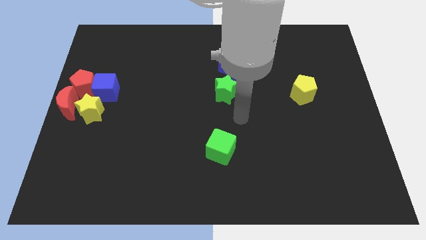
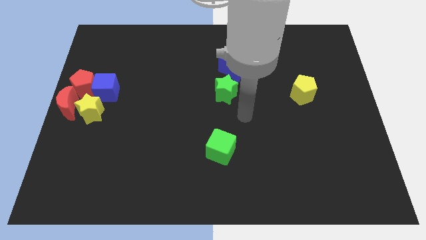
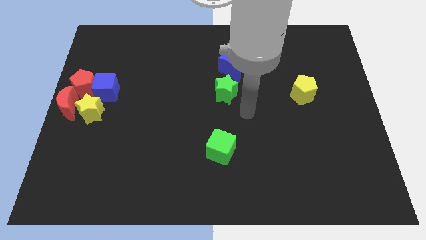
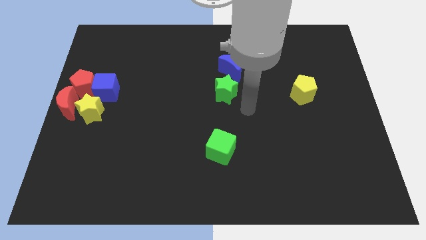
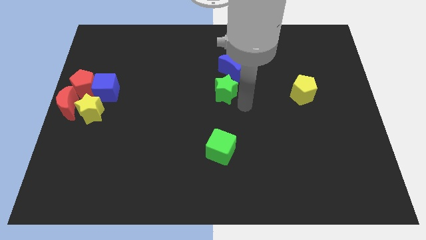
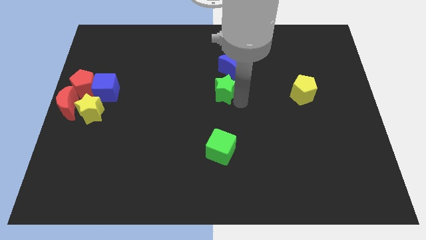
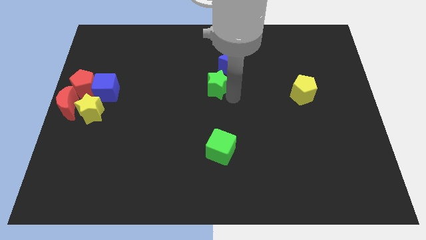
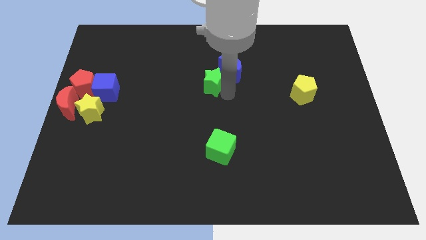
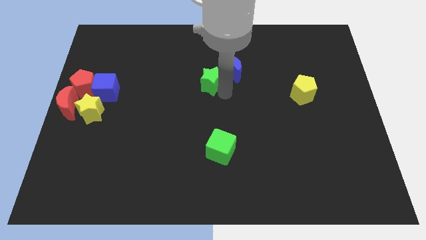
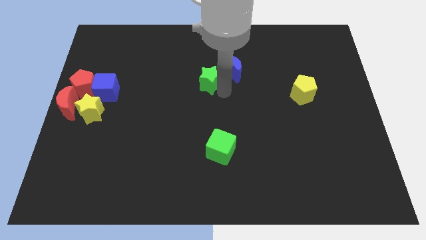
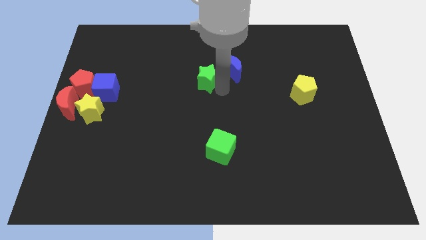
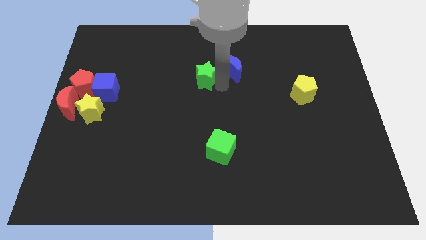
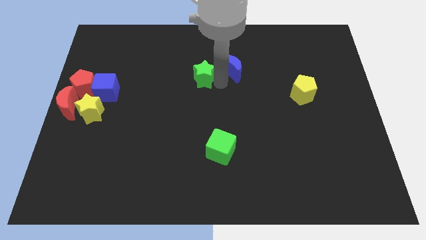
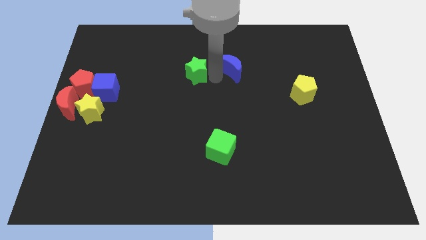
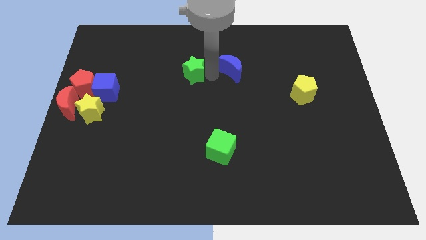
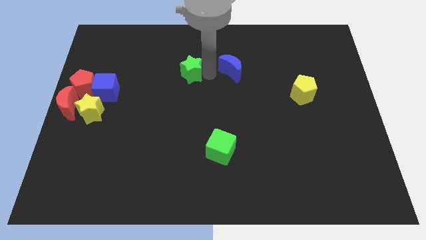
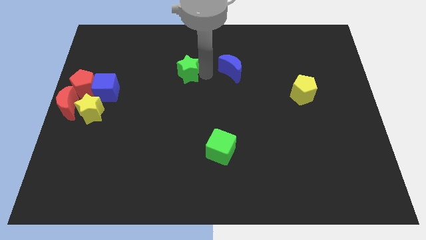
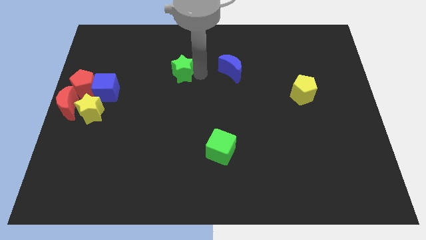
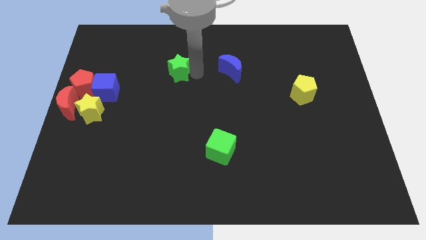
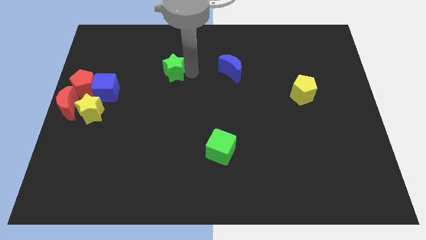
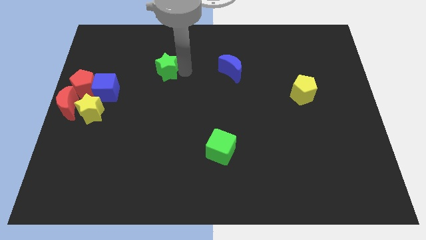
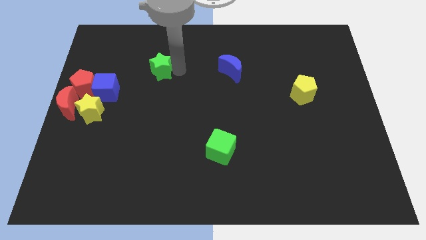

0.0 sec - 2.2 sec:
separate green star and the blue crescent

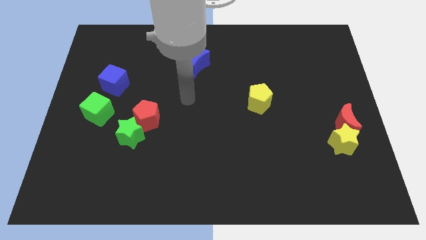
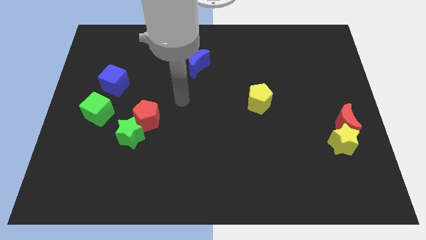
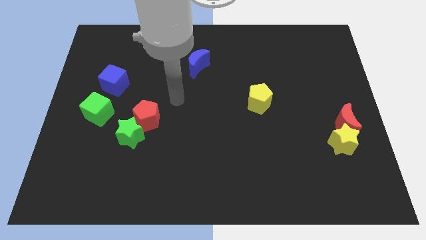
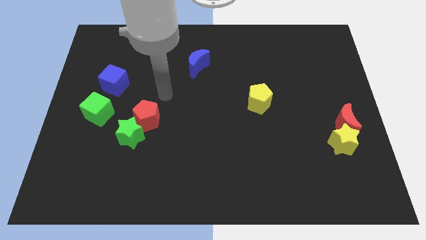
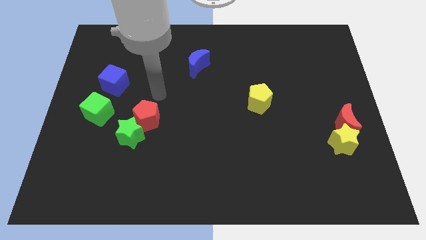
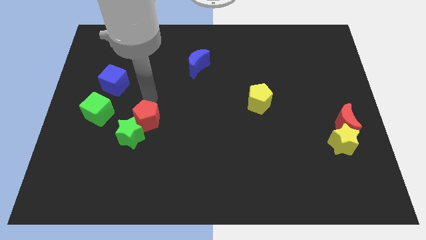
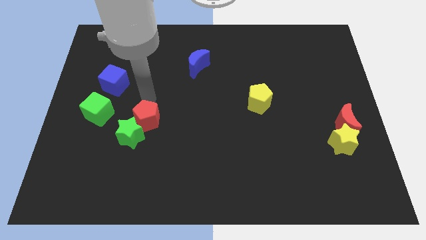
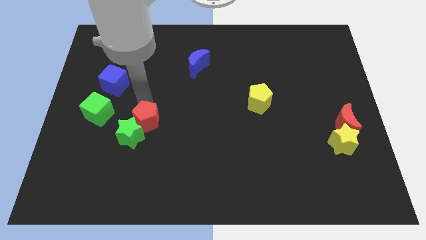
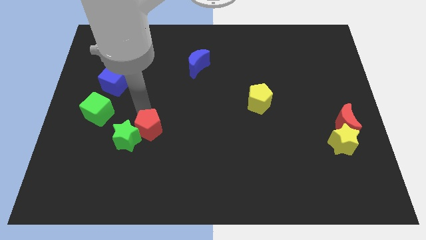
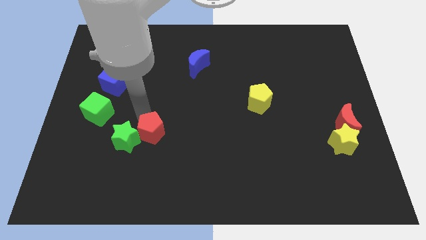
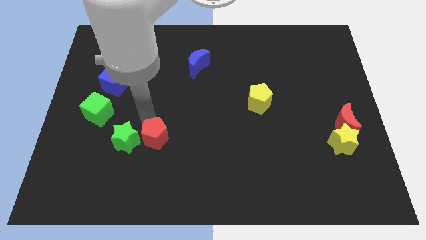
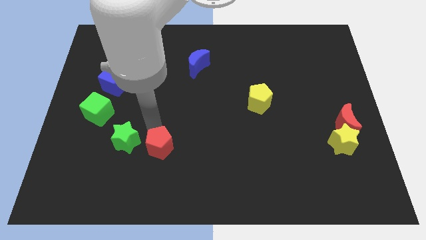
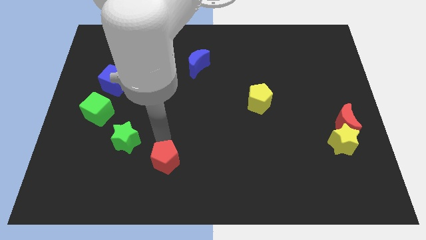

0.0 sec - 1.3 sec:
push the red pentagon to the bottom of the board

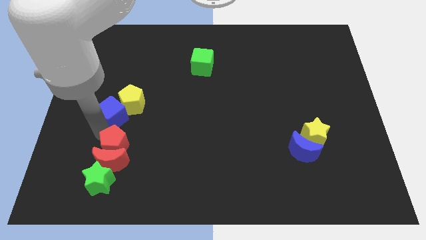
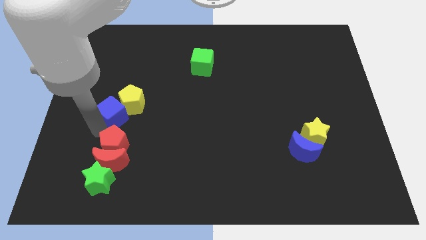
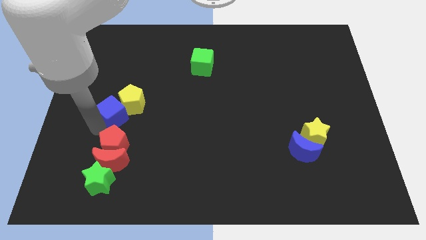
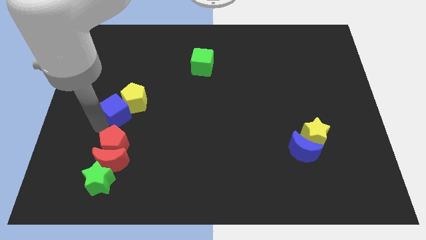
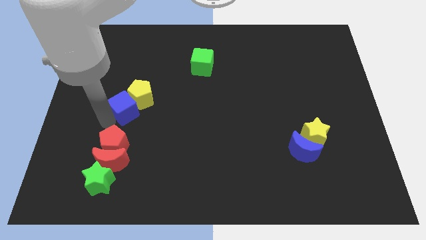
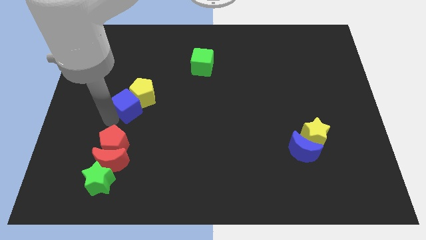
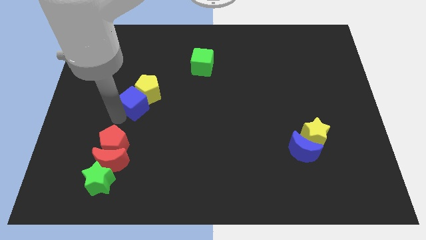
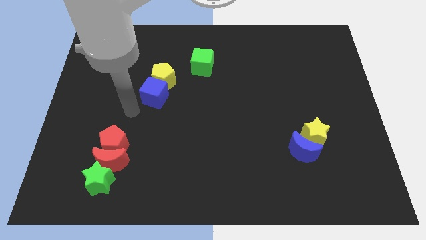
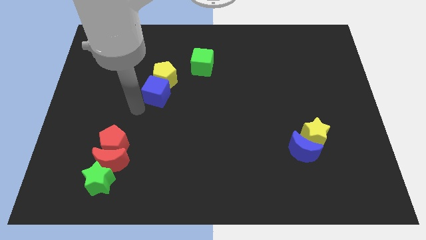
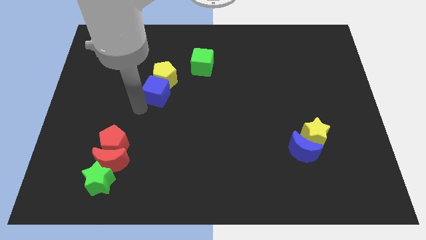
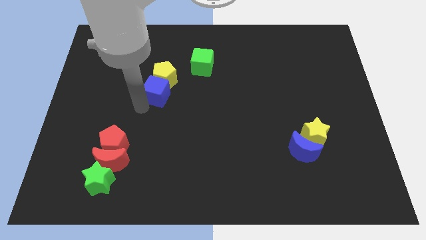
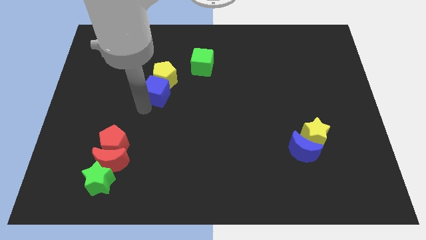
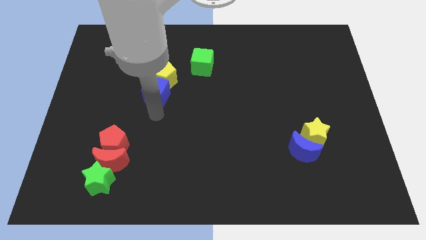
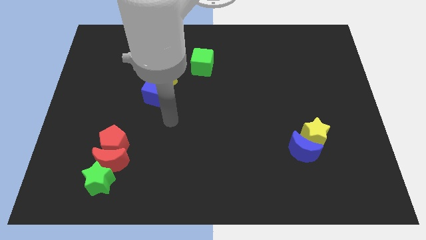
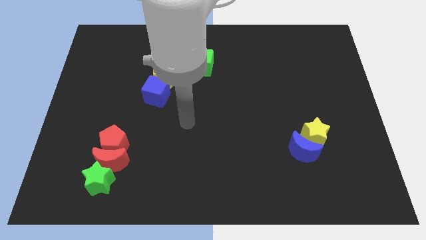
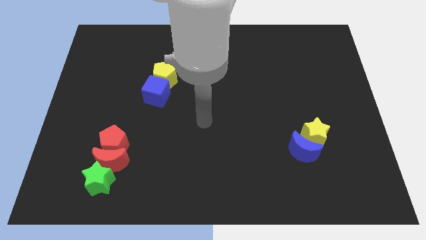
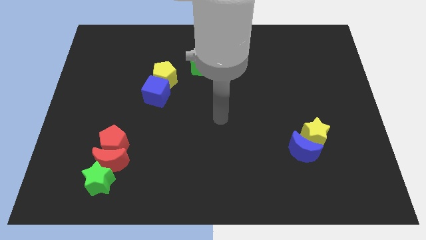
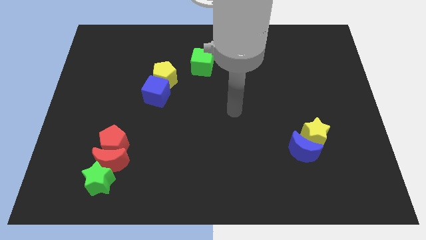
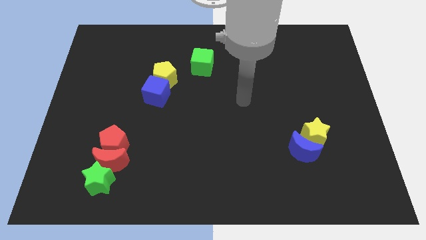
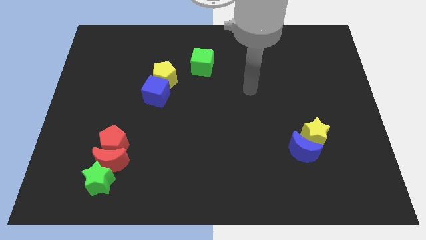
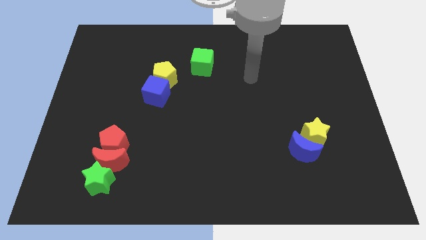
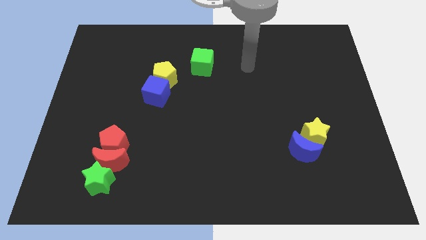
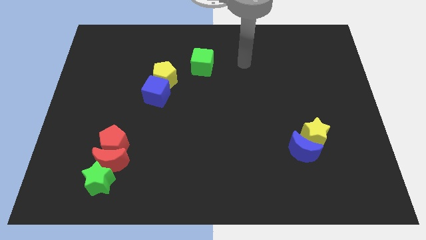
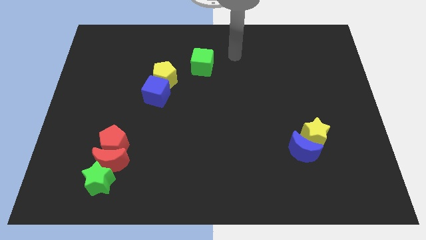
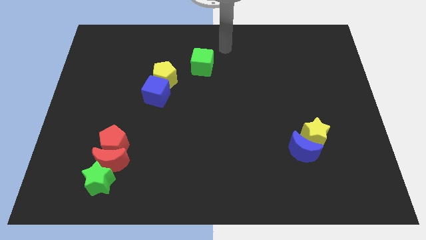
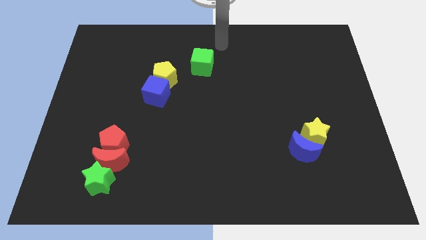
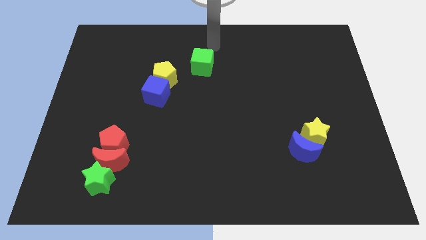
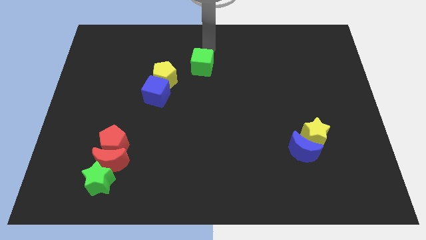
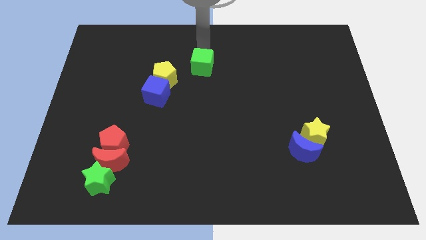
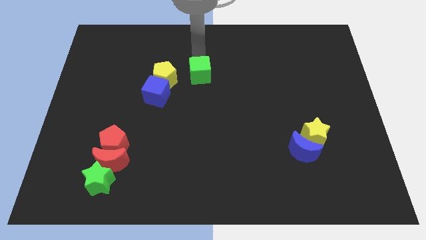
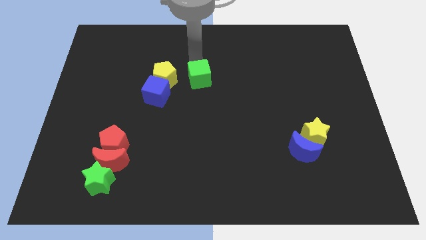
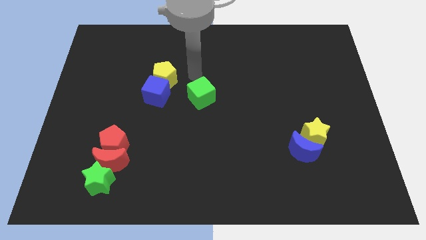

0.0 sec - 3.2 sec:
push the yellow pentagon and blue cube towards top

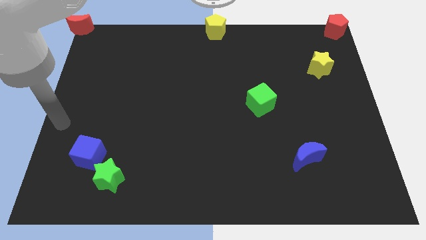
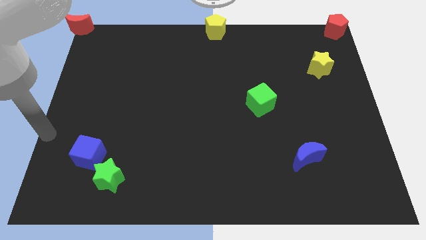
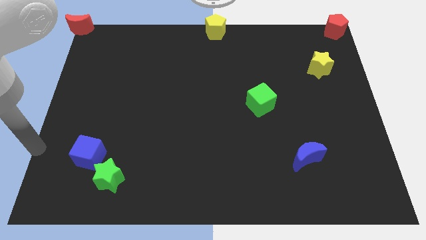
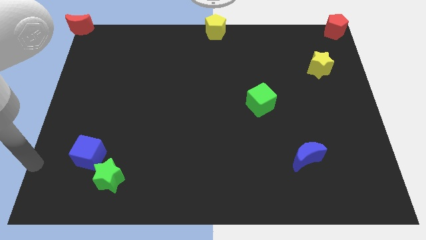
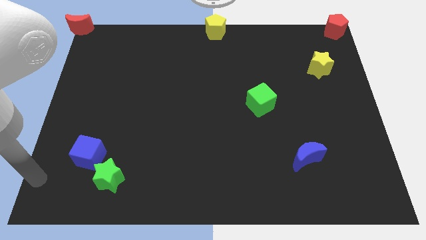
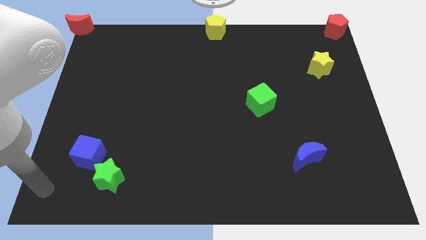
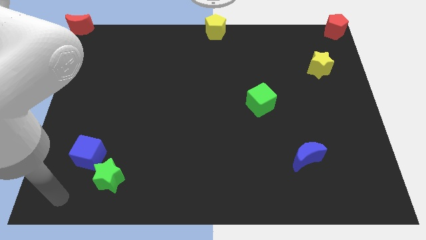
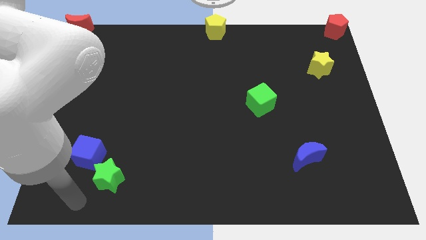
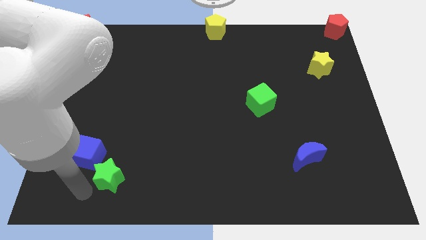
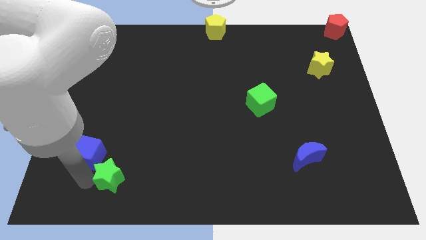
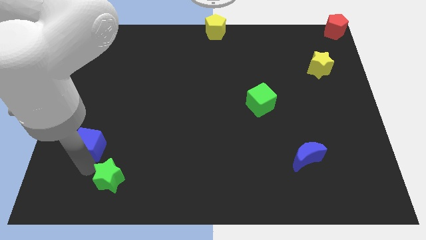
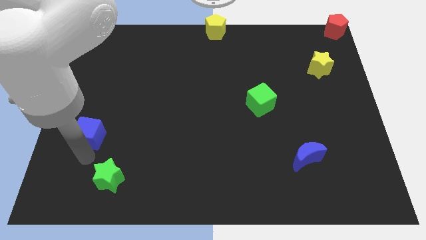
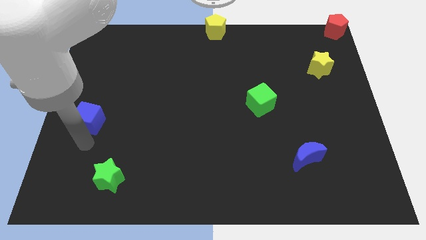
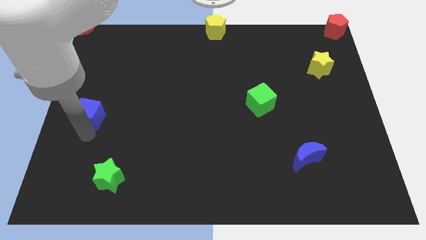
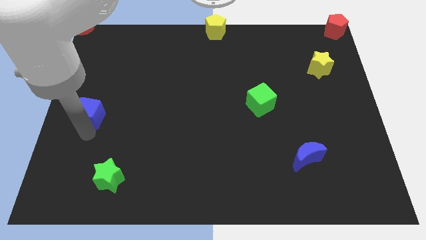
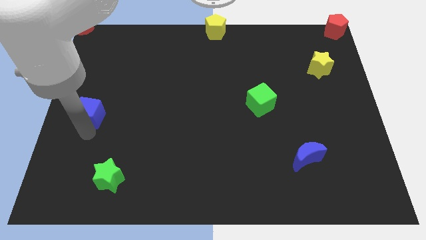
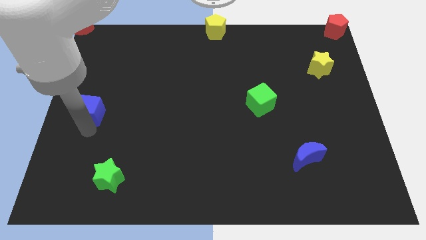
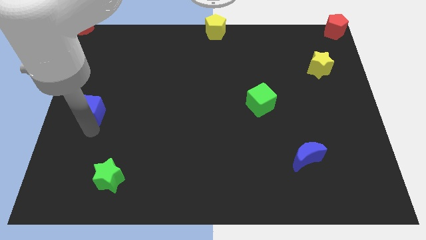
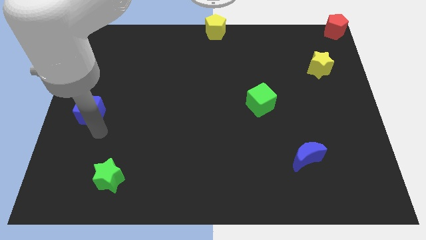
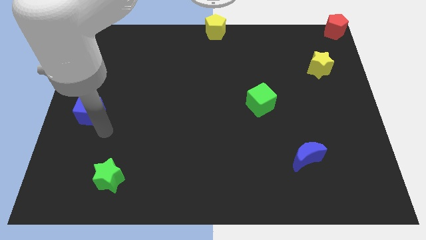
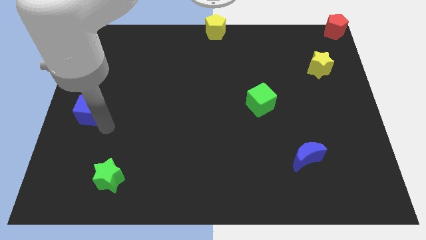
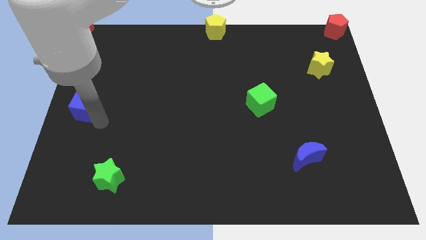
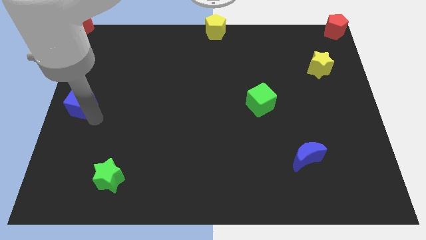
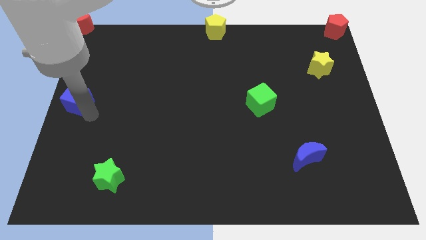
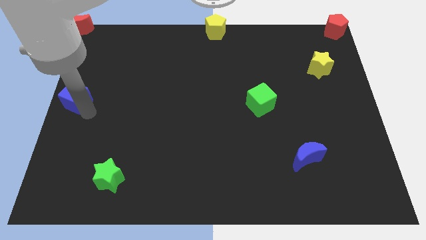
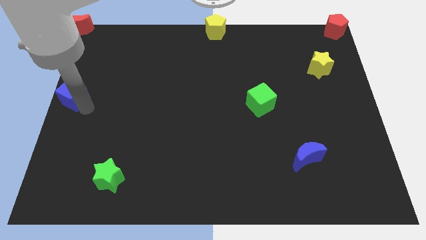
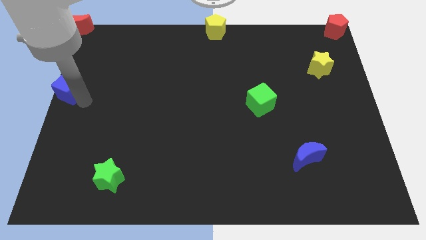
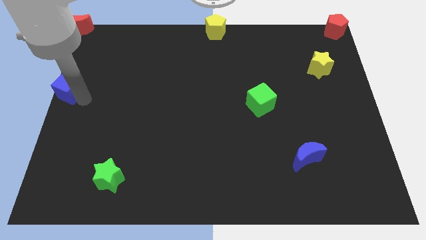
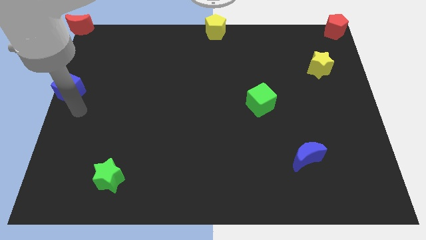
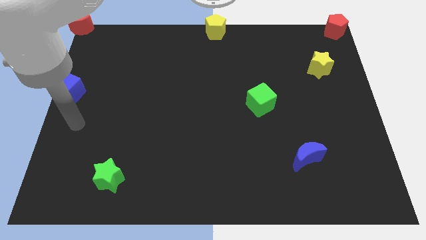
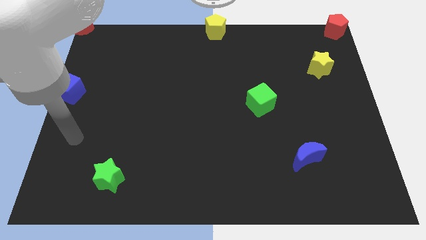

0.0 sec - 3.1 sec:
move blue cube to the left center of the board
